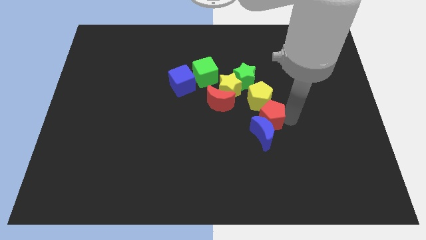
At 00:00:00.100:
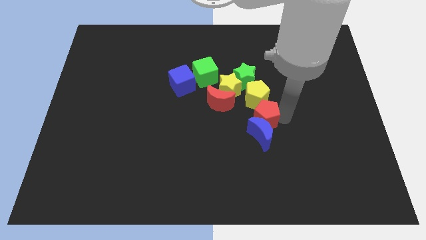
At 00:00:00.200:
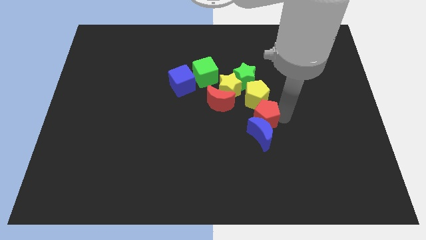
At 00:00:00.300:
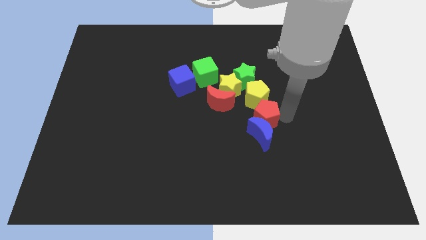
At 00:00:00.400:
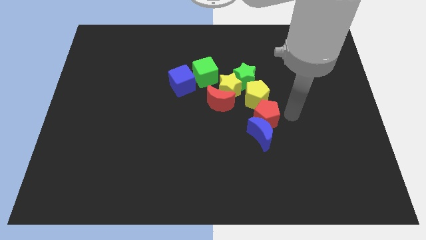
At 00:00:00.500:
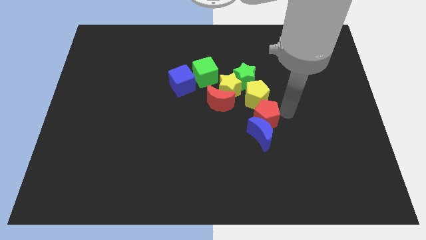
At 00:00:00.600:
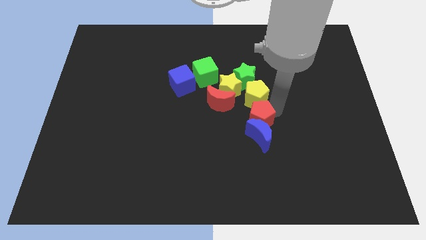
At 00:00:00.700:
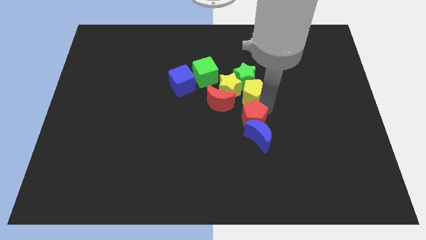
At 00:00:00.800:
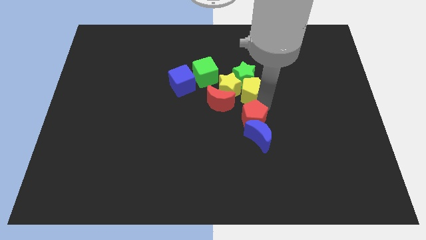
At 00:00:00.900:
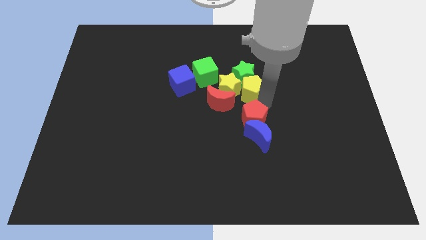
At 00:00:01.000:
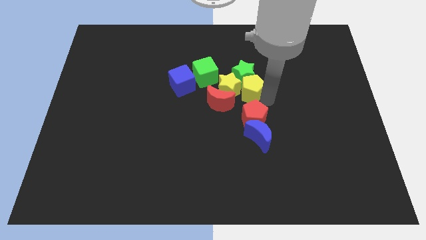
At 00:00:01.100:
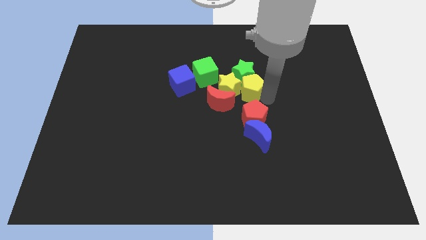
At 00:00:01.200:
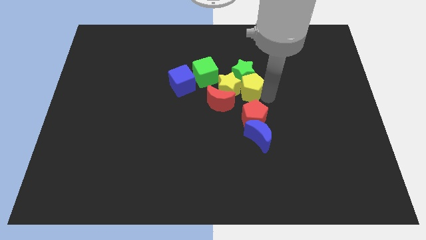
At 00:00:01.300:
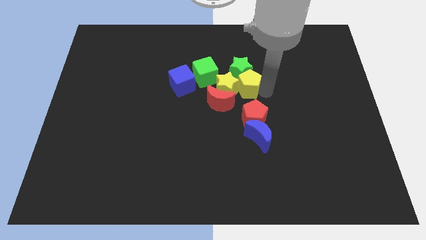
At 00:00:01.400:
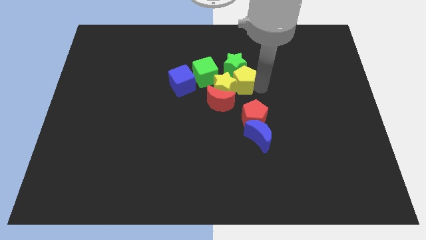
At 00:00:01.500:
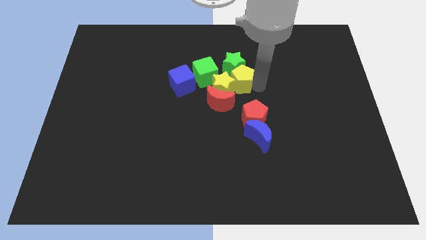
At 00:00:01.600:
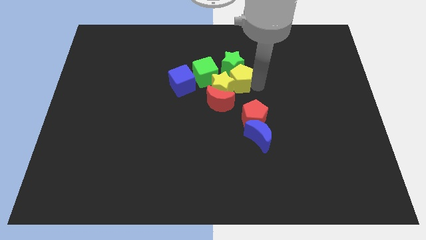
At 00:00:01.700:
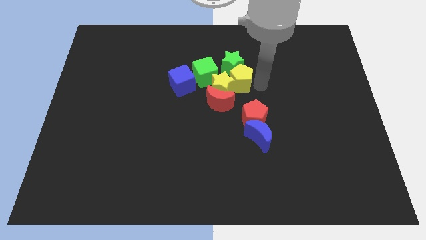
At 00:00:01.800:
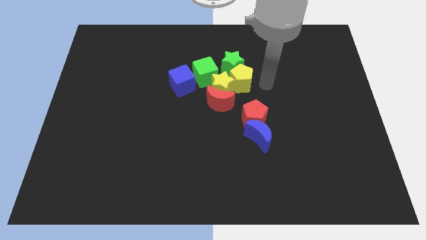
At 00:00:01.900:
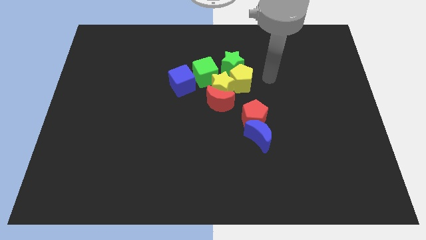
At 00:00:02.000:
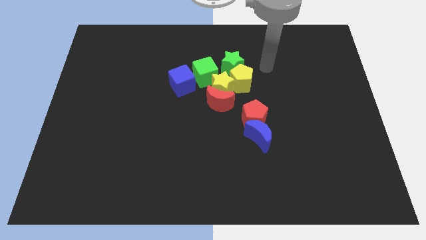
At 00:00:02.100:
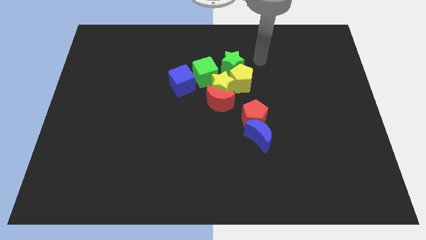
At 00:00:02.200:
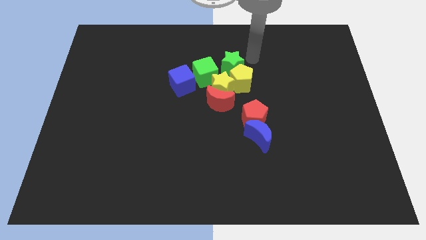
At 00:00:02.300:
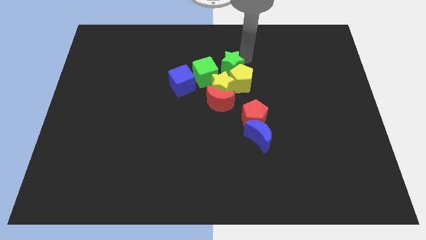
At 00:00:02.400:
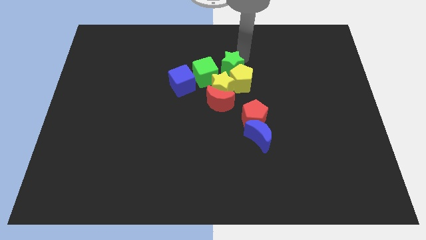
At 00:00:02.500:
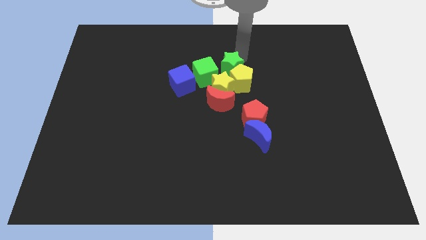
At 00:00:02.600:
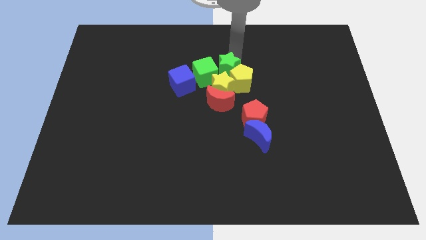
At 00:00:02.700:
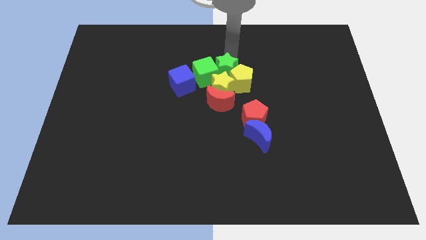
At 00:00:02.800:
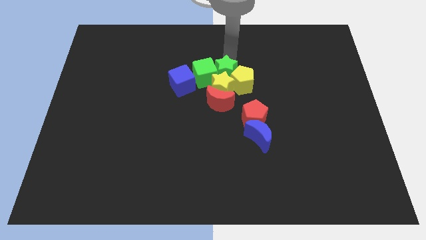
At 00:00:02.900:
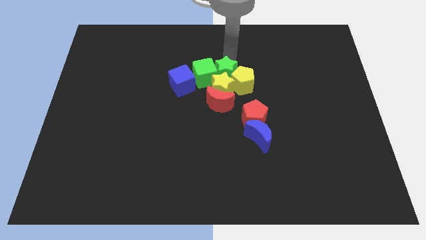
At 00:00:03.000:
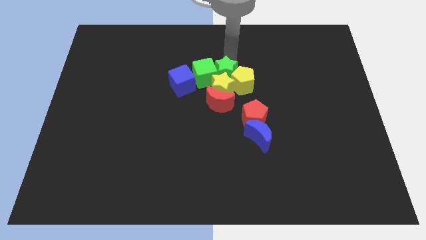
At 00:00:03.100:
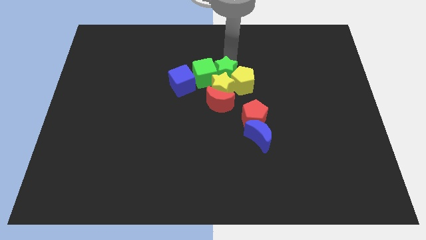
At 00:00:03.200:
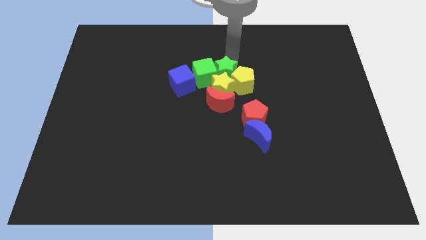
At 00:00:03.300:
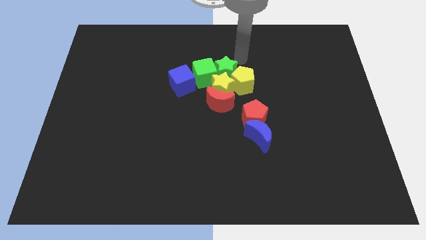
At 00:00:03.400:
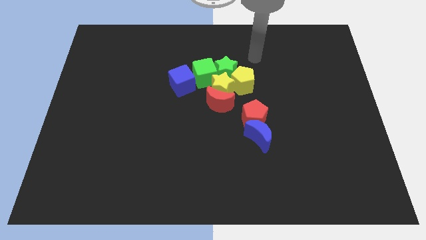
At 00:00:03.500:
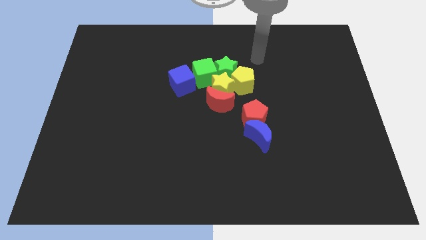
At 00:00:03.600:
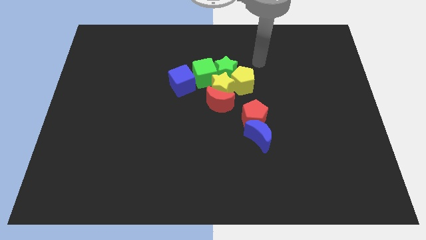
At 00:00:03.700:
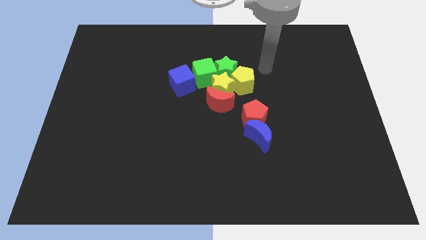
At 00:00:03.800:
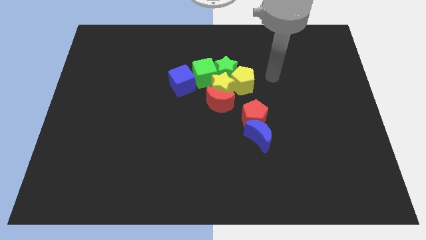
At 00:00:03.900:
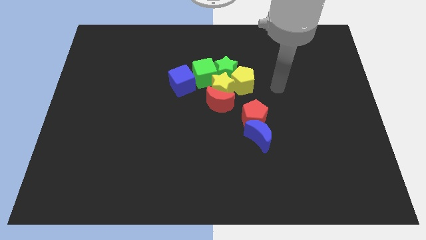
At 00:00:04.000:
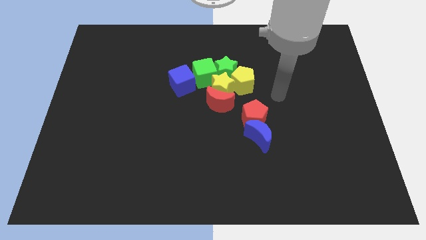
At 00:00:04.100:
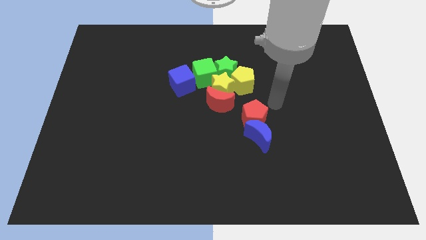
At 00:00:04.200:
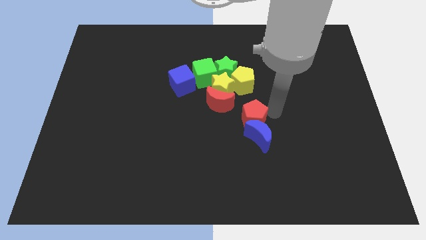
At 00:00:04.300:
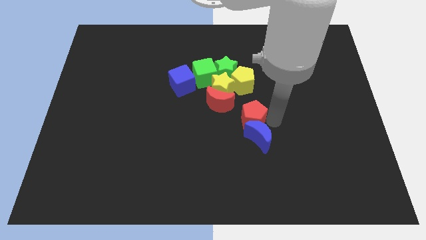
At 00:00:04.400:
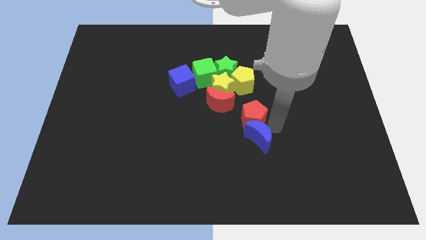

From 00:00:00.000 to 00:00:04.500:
push the green star slightly towards the top of the yellow star

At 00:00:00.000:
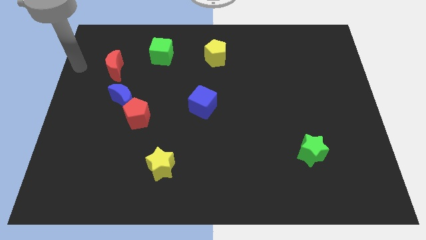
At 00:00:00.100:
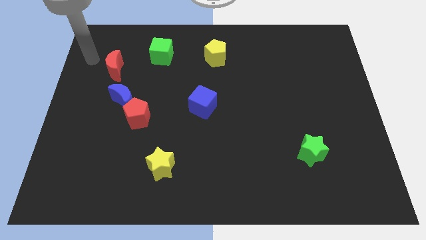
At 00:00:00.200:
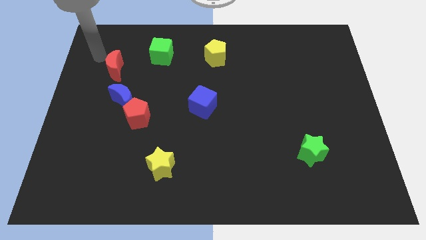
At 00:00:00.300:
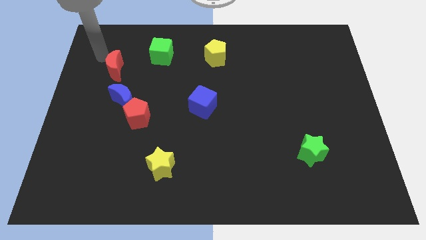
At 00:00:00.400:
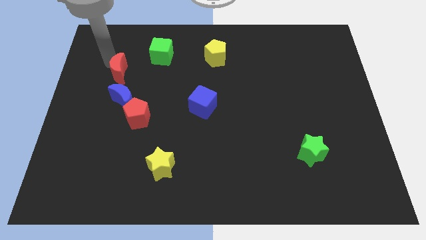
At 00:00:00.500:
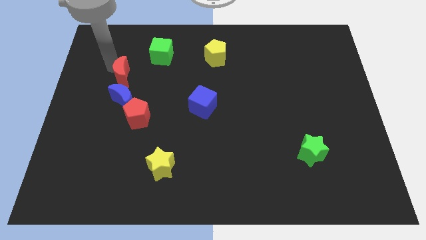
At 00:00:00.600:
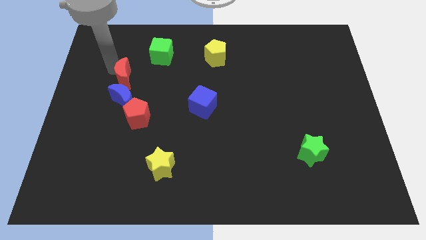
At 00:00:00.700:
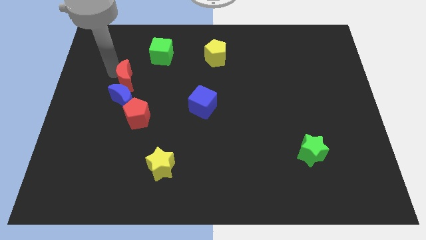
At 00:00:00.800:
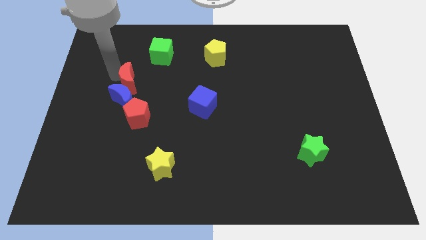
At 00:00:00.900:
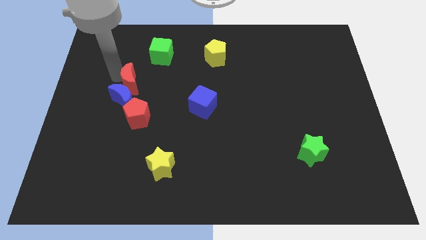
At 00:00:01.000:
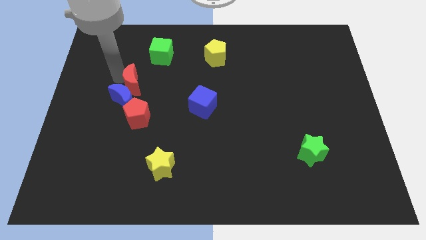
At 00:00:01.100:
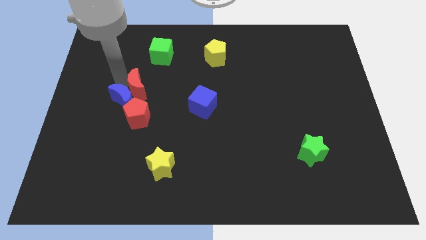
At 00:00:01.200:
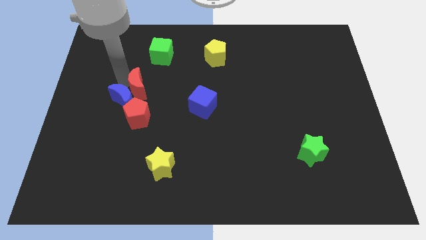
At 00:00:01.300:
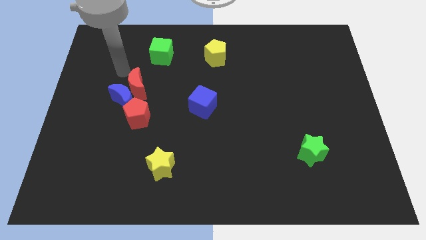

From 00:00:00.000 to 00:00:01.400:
place the red crescent towards the right side of the blue crescent

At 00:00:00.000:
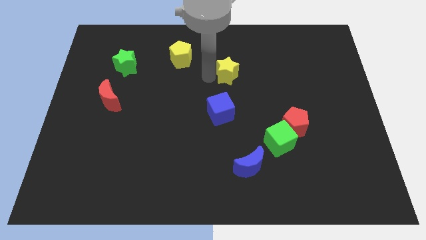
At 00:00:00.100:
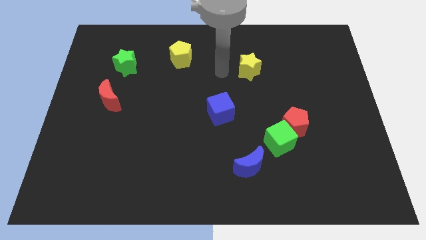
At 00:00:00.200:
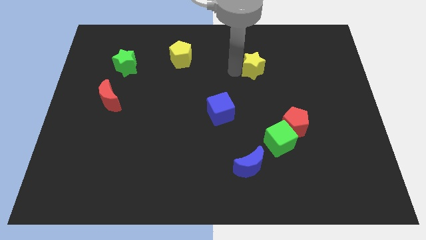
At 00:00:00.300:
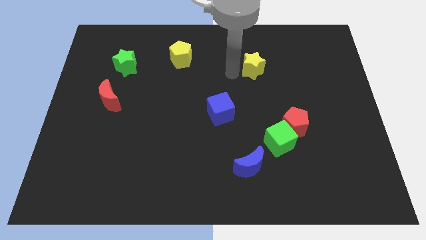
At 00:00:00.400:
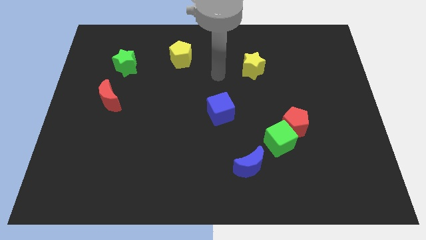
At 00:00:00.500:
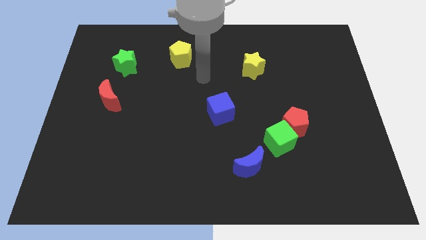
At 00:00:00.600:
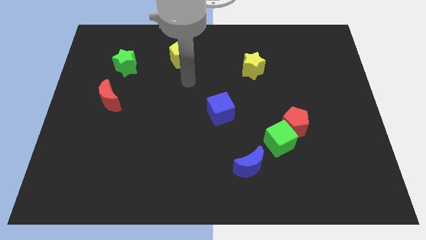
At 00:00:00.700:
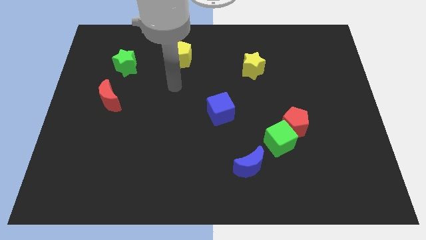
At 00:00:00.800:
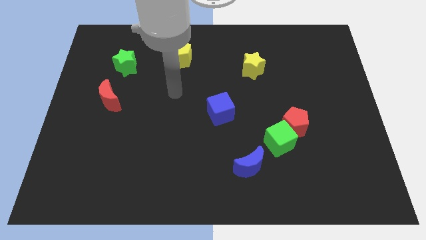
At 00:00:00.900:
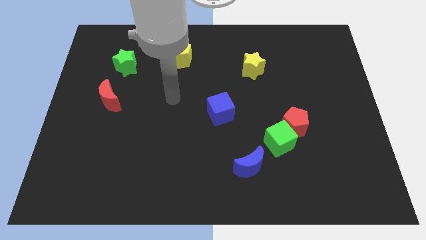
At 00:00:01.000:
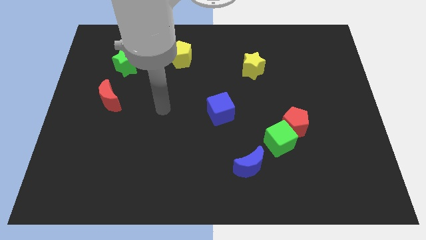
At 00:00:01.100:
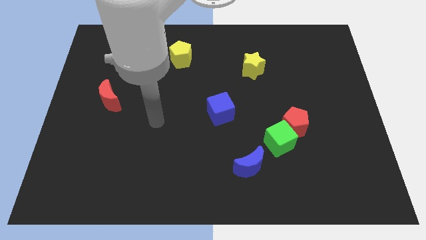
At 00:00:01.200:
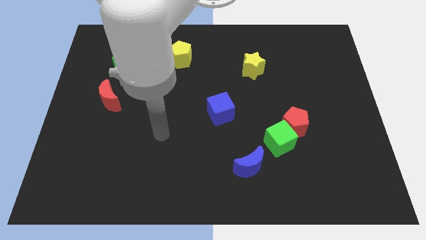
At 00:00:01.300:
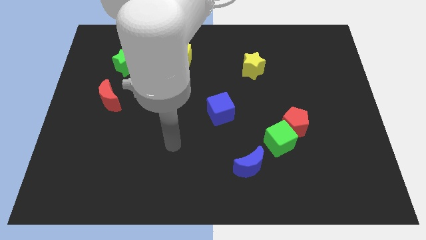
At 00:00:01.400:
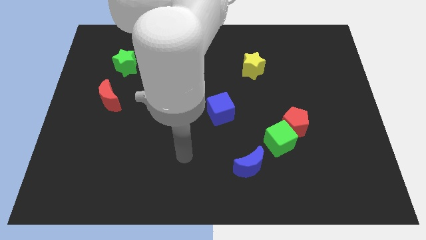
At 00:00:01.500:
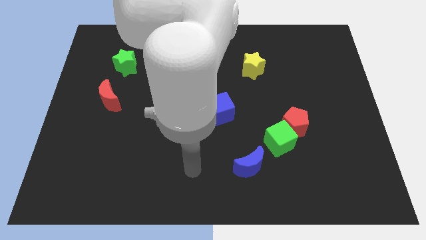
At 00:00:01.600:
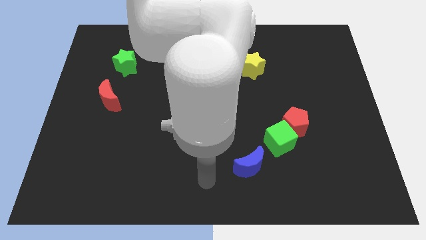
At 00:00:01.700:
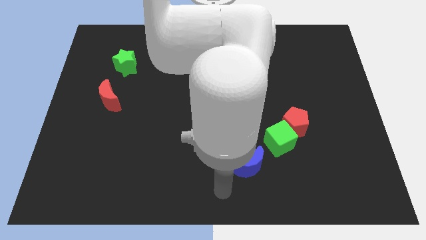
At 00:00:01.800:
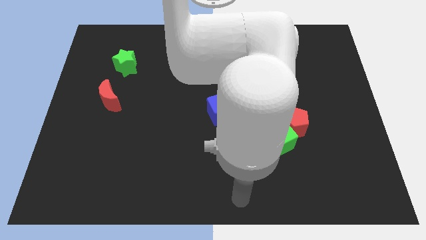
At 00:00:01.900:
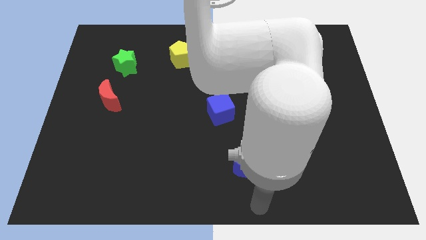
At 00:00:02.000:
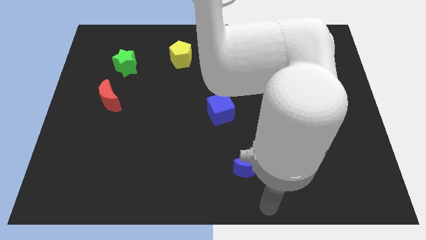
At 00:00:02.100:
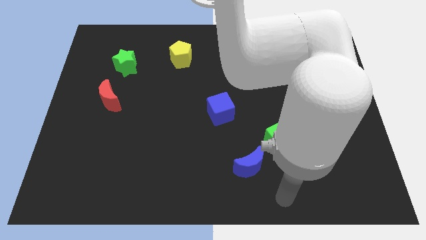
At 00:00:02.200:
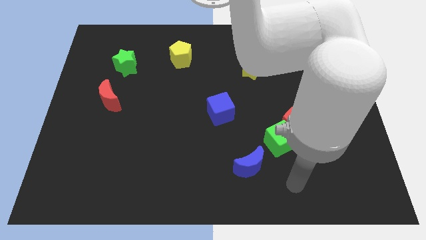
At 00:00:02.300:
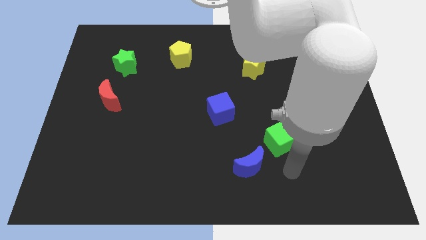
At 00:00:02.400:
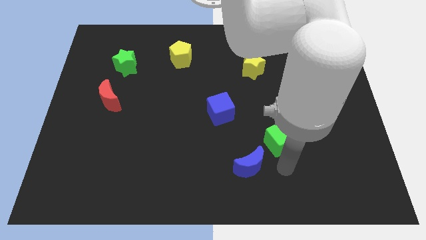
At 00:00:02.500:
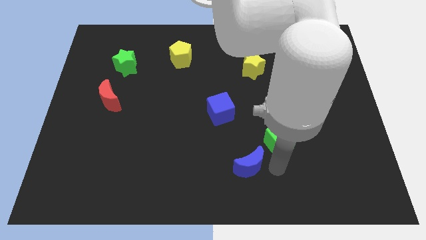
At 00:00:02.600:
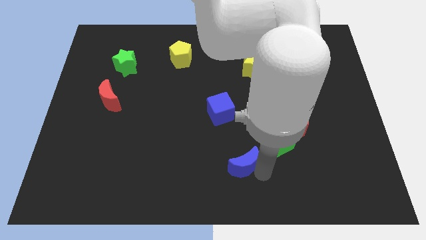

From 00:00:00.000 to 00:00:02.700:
place the arm right to the blue moon

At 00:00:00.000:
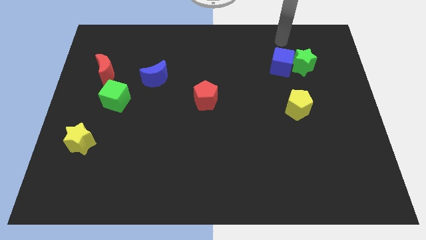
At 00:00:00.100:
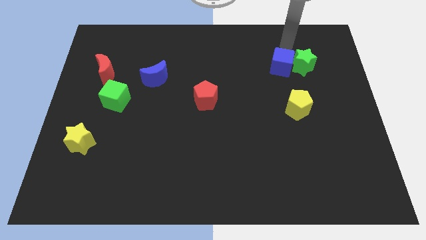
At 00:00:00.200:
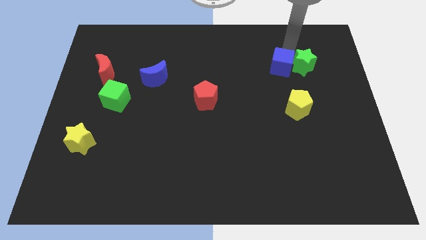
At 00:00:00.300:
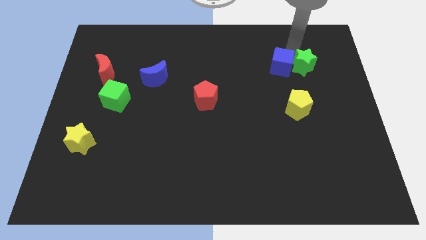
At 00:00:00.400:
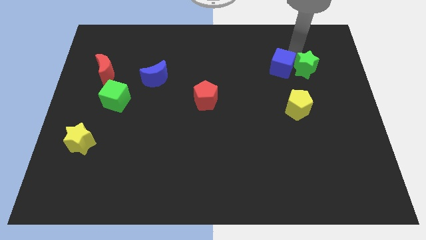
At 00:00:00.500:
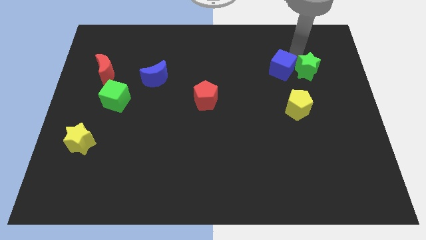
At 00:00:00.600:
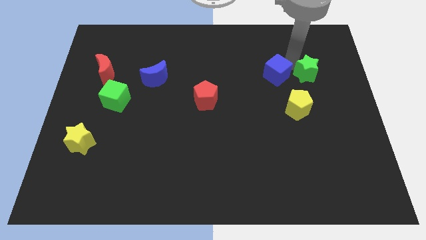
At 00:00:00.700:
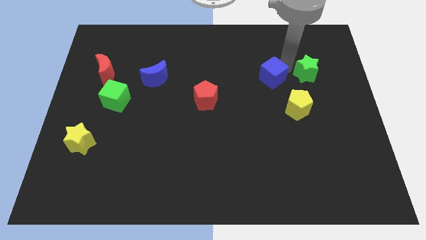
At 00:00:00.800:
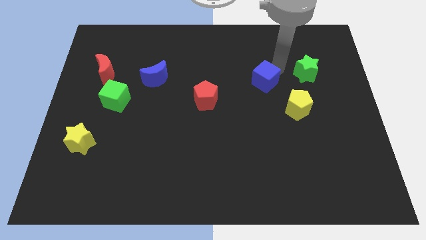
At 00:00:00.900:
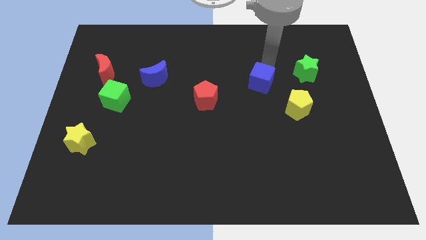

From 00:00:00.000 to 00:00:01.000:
move the blue cube away from the green star
